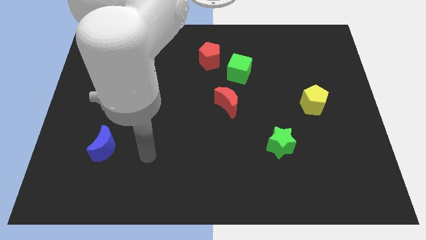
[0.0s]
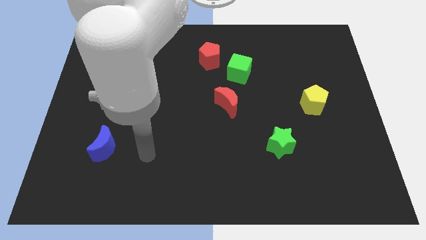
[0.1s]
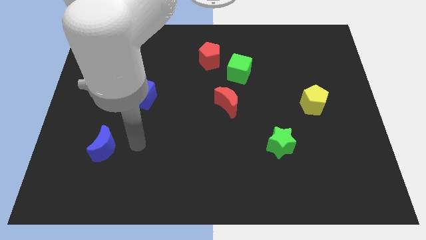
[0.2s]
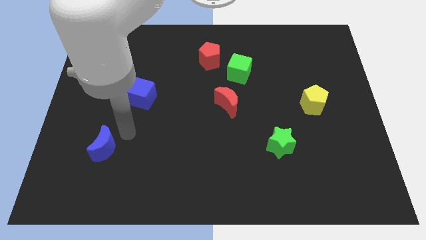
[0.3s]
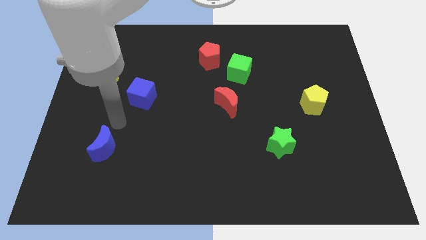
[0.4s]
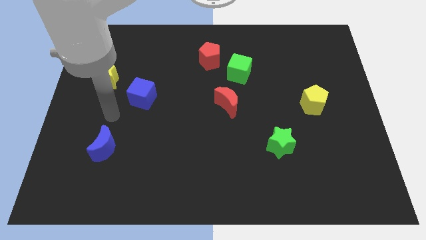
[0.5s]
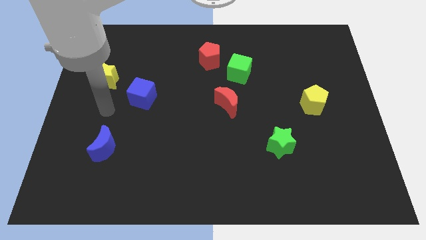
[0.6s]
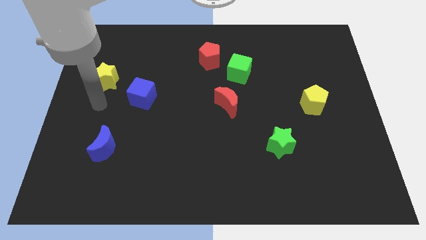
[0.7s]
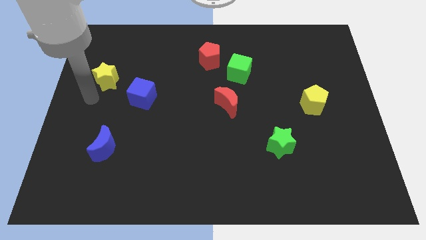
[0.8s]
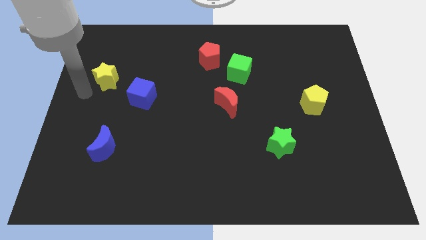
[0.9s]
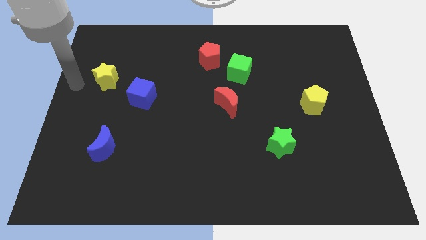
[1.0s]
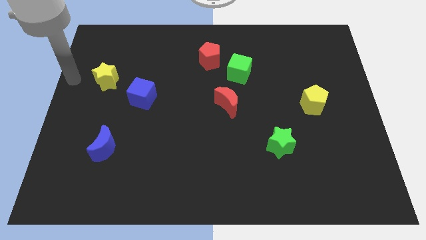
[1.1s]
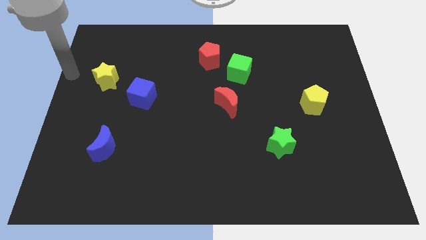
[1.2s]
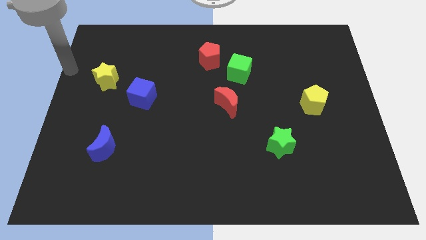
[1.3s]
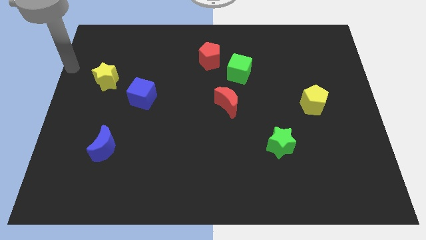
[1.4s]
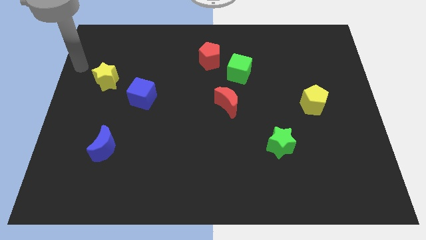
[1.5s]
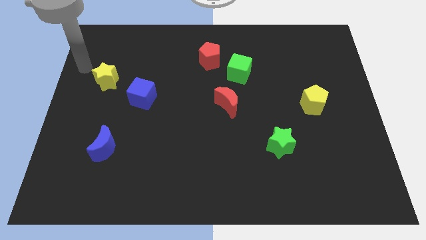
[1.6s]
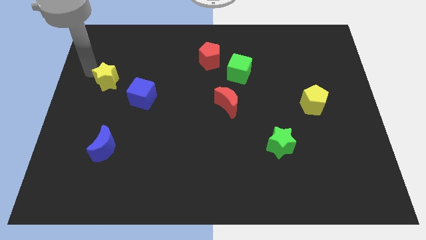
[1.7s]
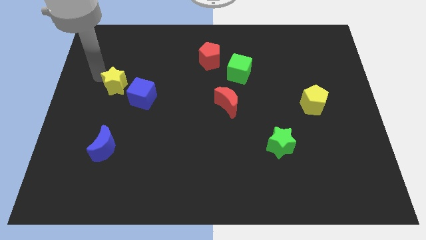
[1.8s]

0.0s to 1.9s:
move your arm towards the yellow star

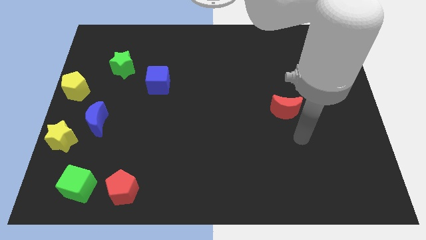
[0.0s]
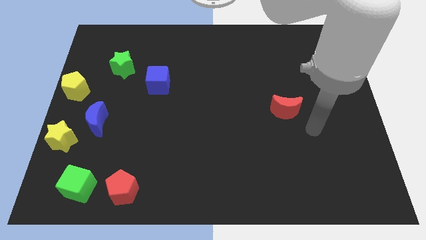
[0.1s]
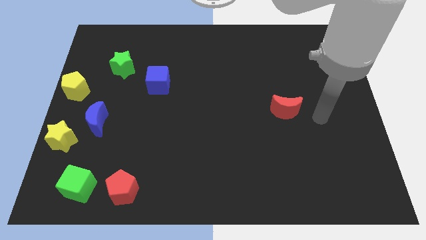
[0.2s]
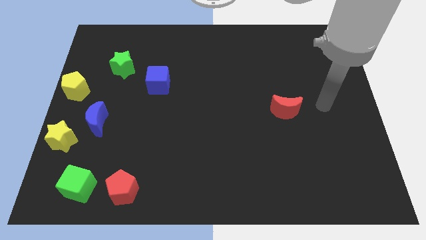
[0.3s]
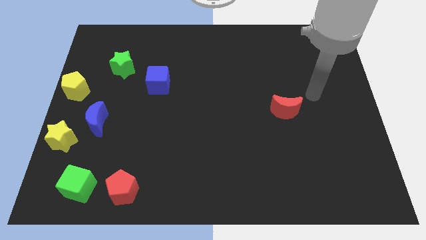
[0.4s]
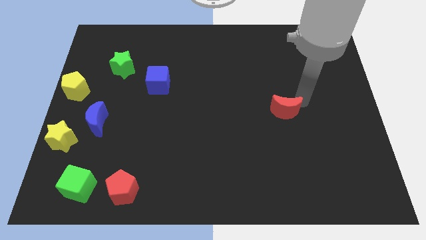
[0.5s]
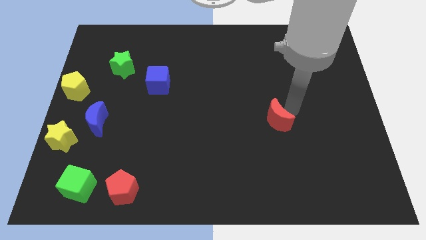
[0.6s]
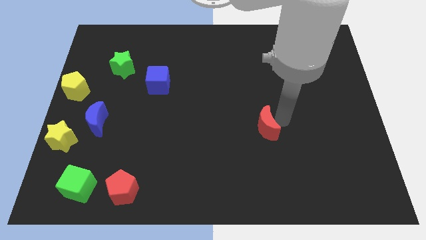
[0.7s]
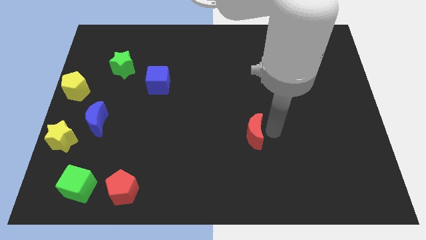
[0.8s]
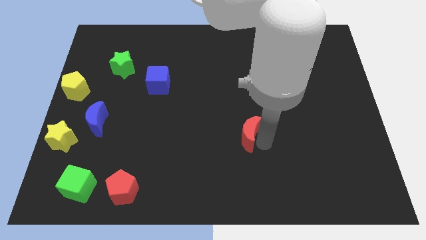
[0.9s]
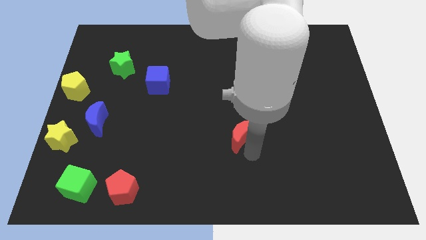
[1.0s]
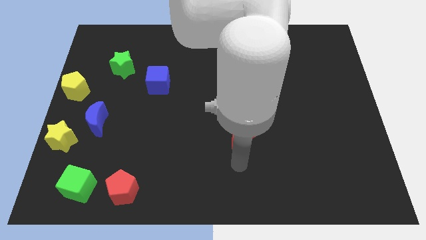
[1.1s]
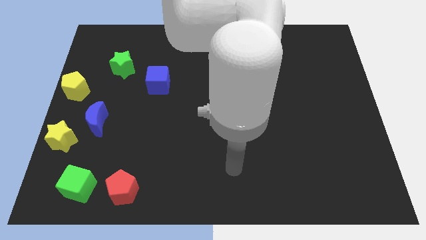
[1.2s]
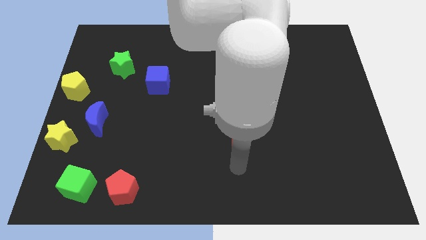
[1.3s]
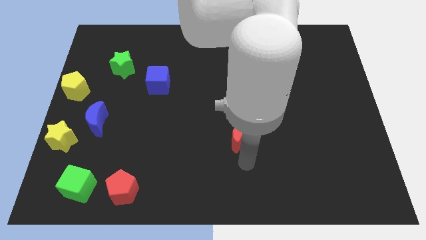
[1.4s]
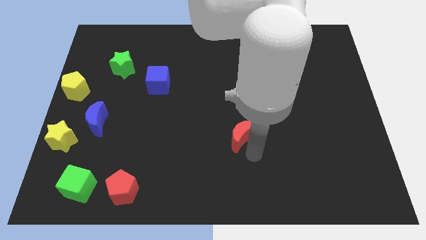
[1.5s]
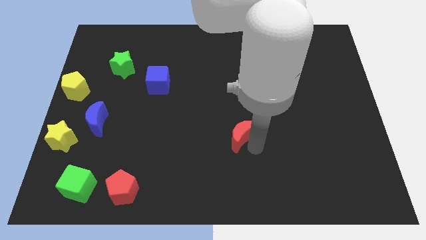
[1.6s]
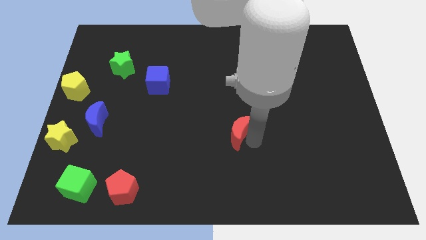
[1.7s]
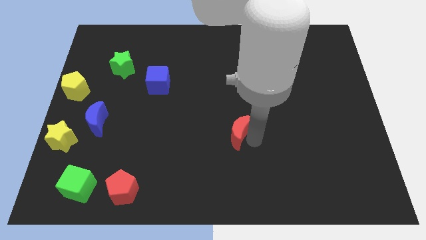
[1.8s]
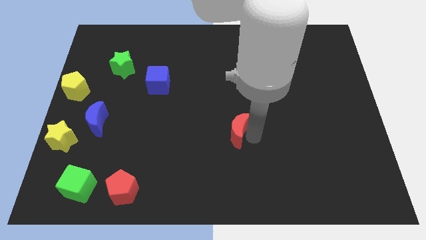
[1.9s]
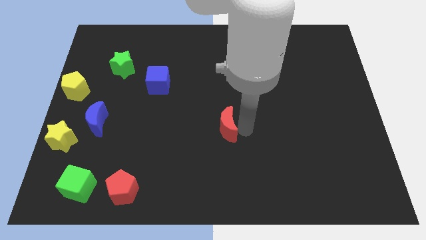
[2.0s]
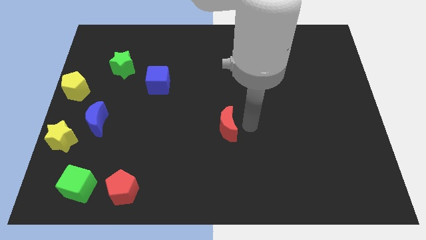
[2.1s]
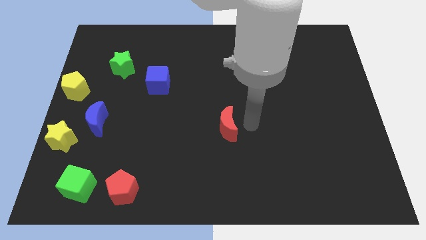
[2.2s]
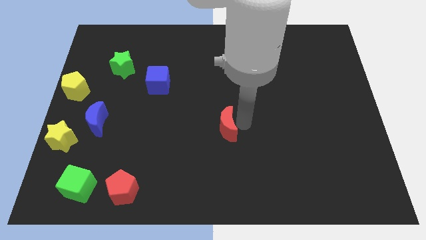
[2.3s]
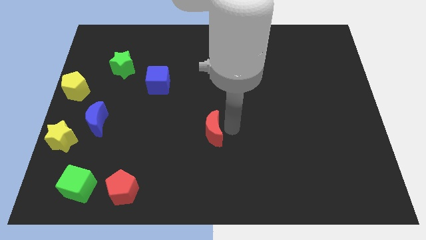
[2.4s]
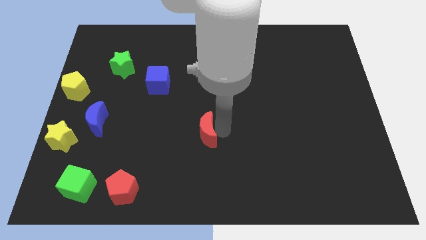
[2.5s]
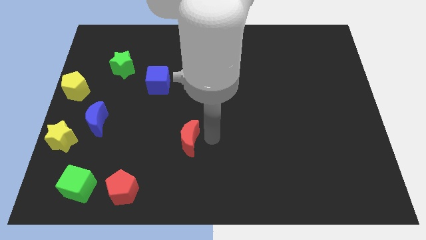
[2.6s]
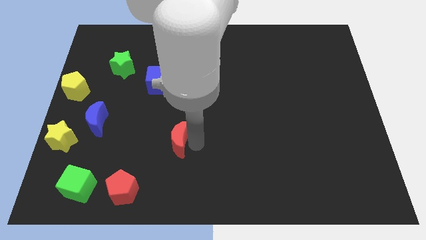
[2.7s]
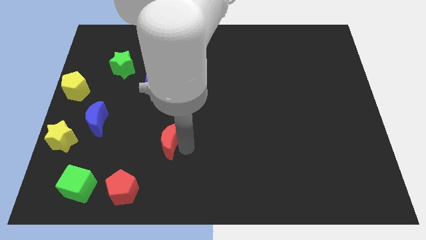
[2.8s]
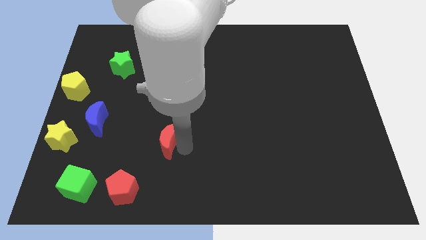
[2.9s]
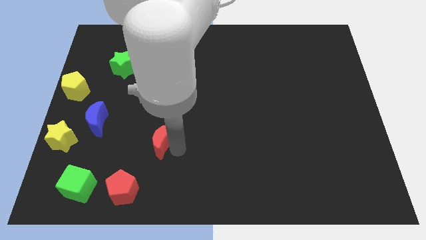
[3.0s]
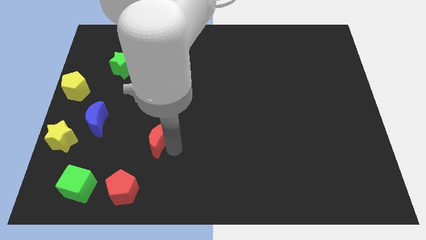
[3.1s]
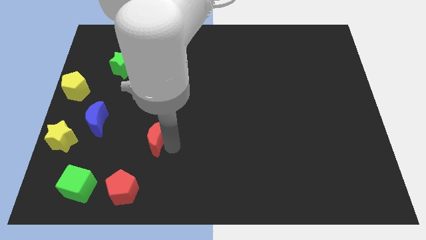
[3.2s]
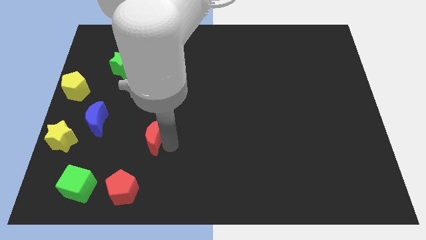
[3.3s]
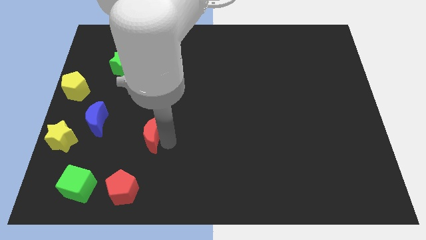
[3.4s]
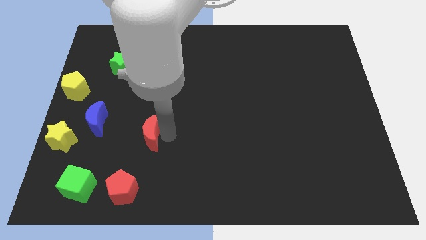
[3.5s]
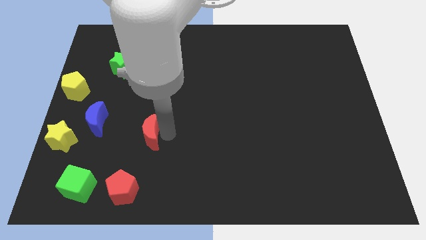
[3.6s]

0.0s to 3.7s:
move the red moon towards the blue moon

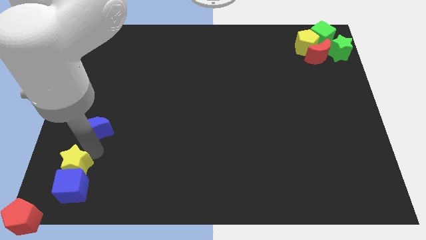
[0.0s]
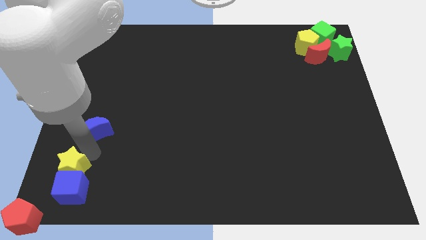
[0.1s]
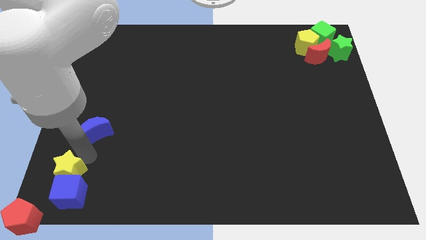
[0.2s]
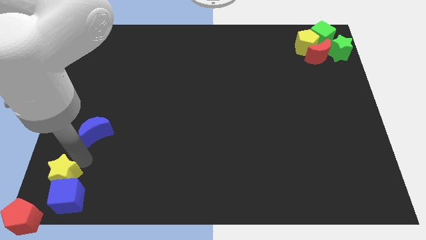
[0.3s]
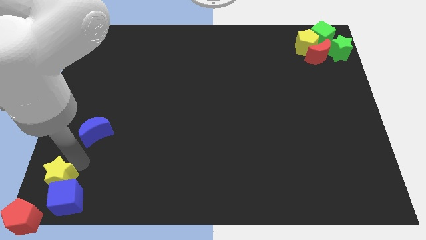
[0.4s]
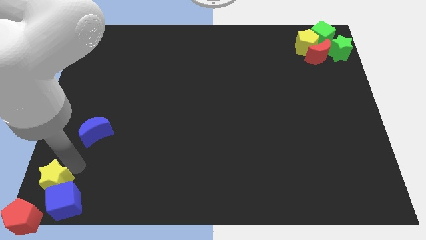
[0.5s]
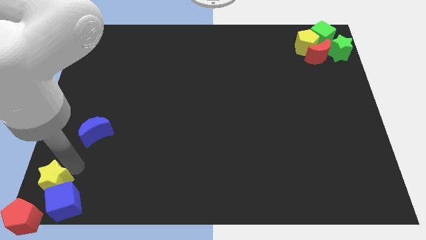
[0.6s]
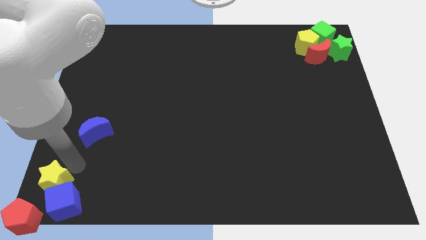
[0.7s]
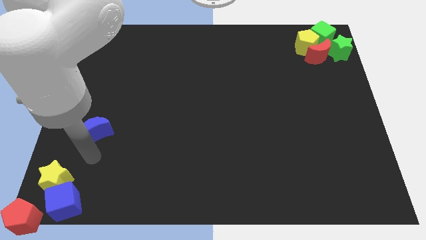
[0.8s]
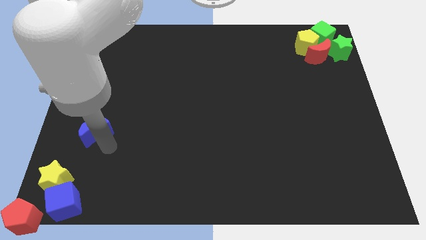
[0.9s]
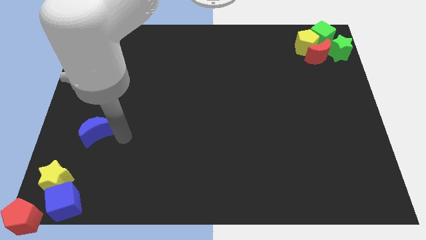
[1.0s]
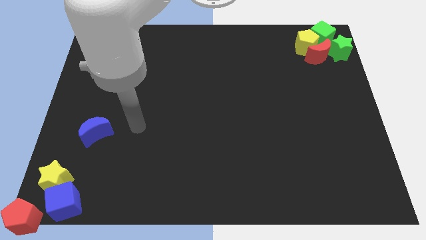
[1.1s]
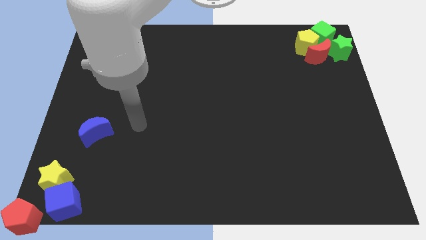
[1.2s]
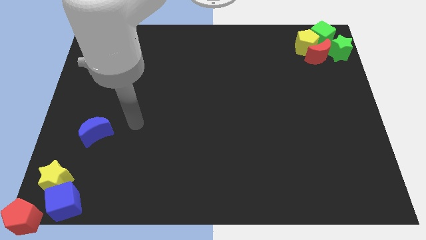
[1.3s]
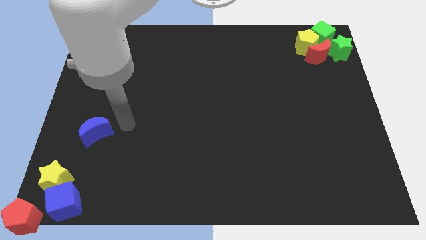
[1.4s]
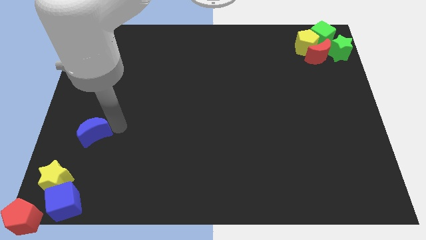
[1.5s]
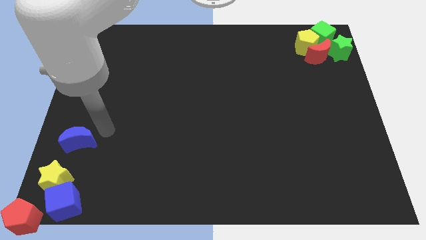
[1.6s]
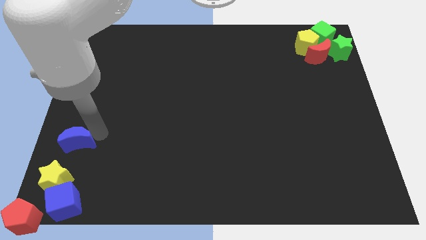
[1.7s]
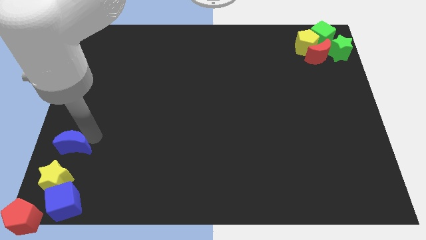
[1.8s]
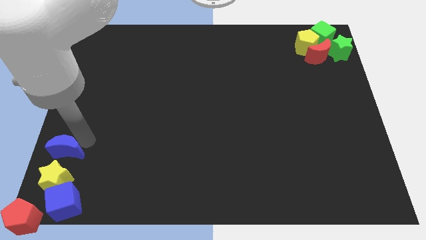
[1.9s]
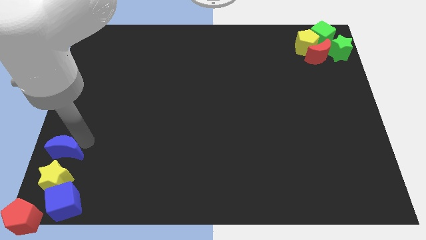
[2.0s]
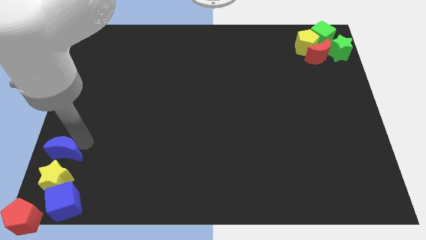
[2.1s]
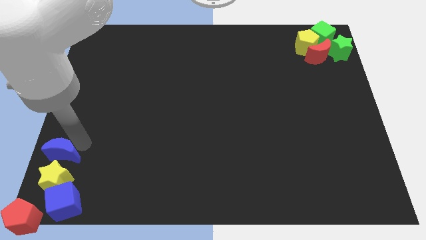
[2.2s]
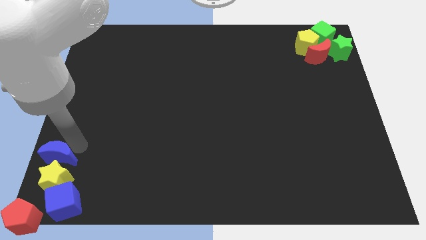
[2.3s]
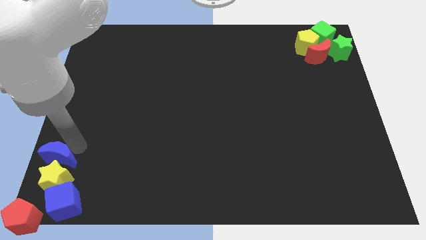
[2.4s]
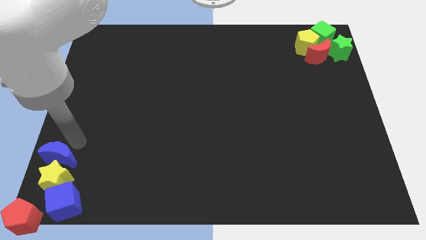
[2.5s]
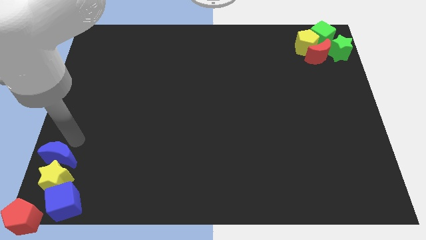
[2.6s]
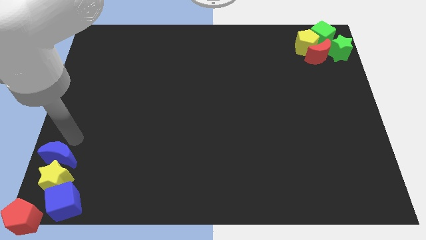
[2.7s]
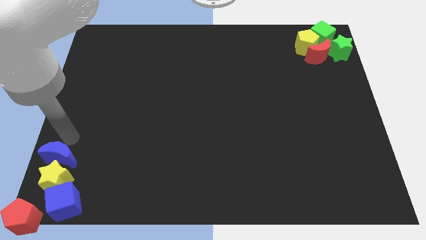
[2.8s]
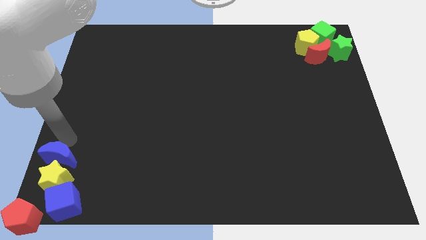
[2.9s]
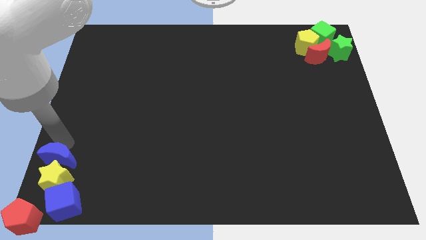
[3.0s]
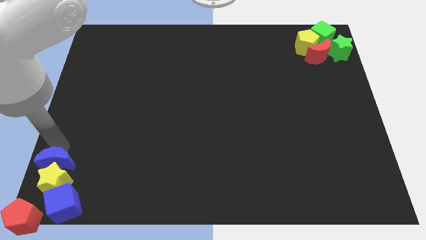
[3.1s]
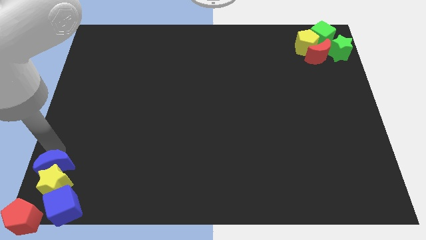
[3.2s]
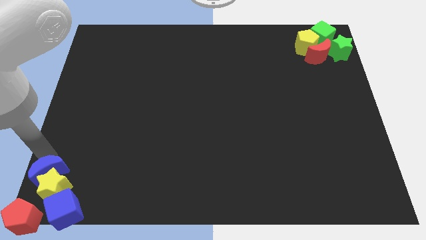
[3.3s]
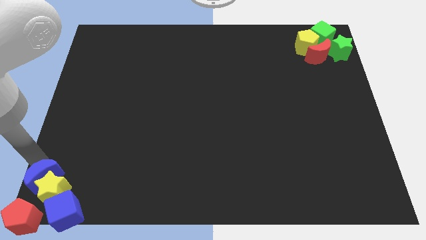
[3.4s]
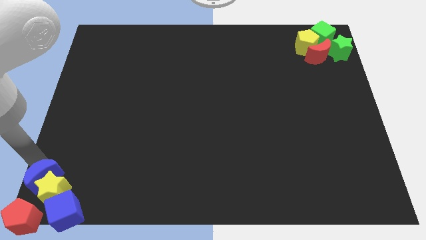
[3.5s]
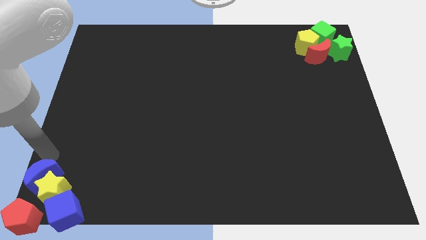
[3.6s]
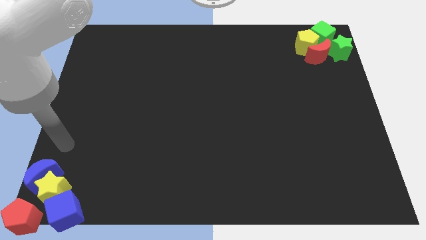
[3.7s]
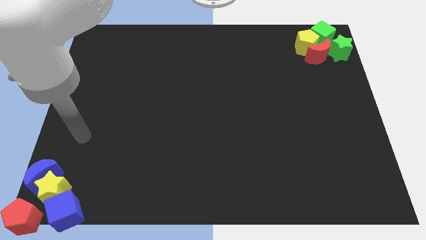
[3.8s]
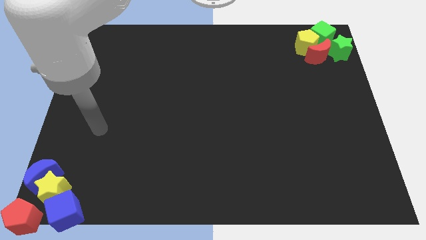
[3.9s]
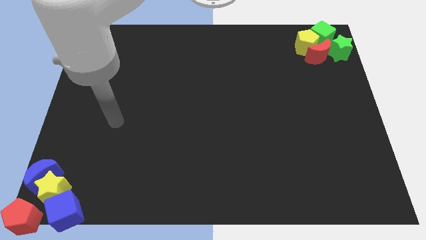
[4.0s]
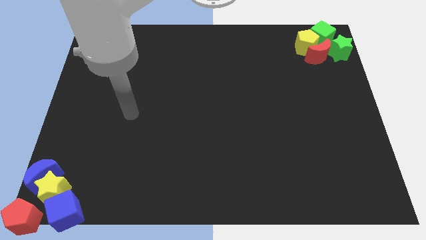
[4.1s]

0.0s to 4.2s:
push the blue semicircle into the yellow star
